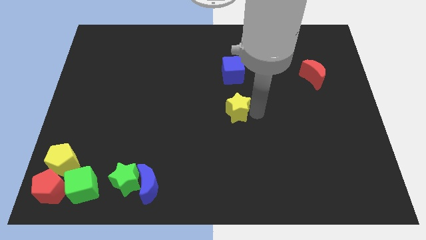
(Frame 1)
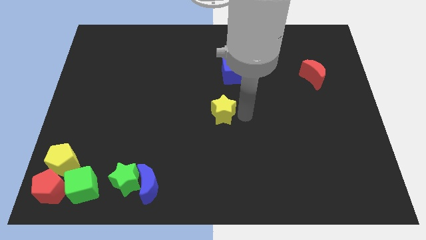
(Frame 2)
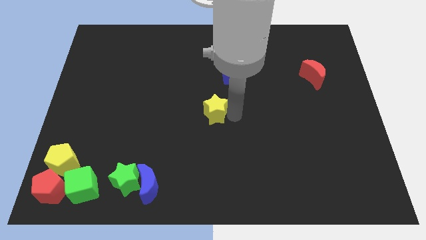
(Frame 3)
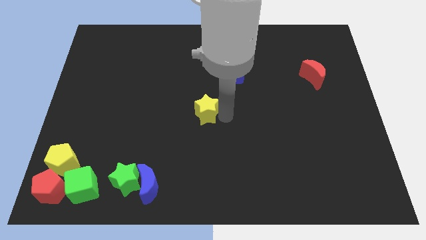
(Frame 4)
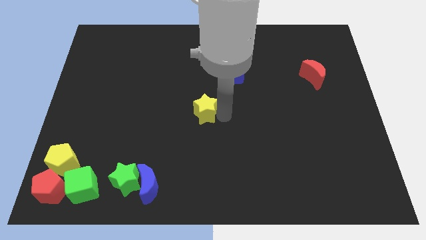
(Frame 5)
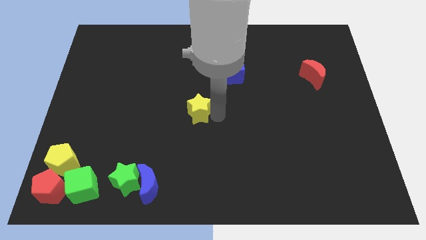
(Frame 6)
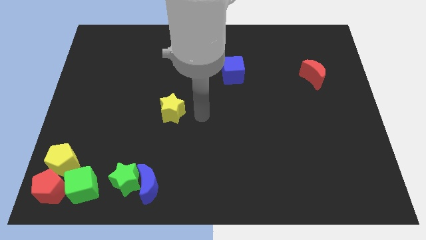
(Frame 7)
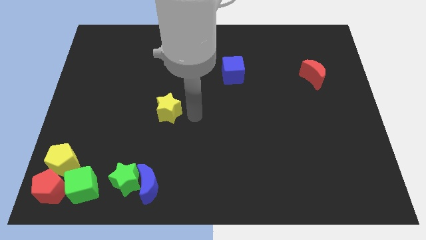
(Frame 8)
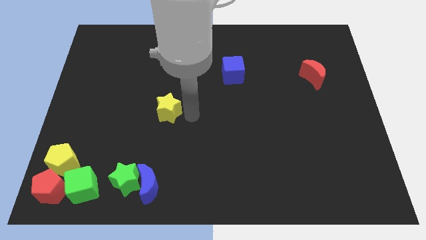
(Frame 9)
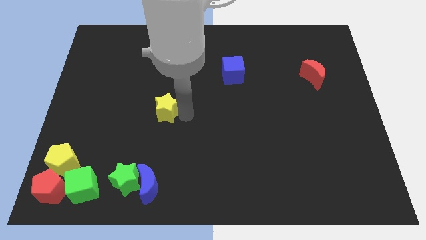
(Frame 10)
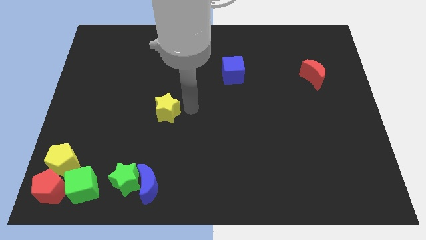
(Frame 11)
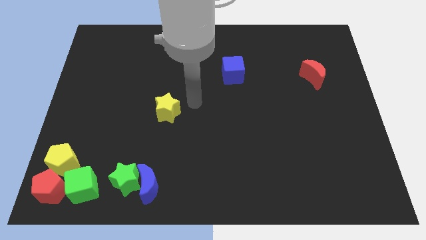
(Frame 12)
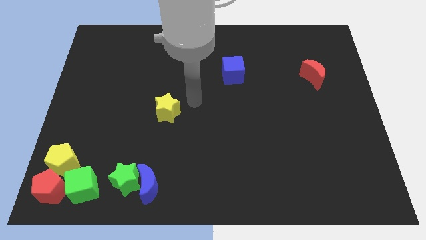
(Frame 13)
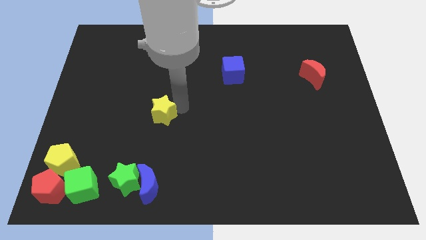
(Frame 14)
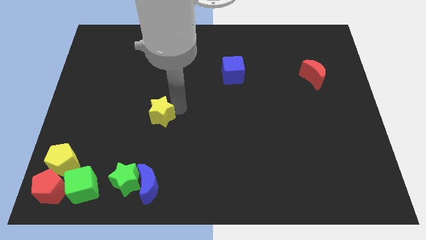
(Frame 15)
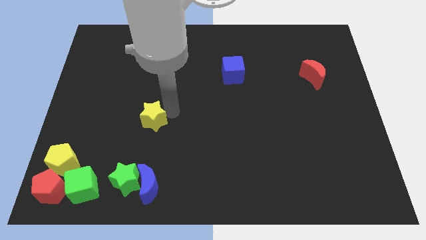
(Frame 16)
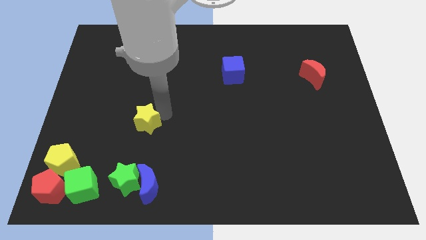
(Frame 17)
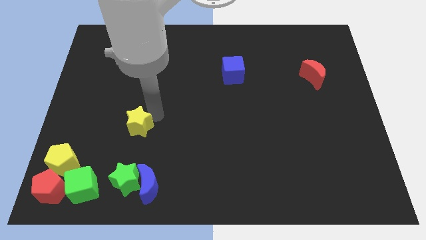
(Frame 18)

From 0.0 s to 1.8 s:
push the yellow star towards the group of blocks

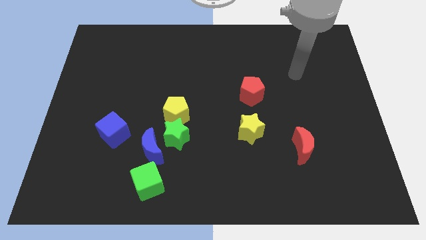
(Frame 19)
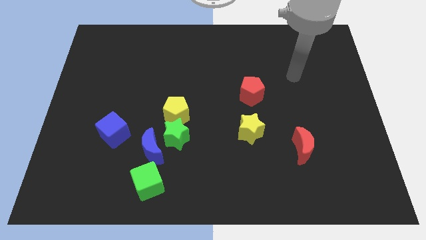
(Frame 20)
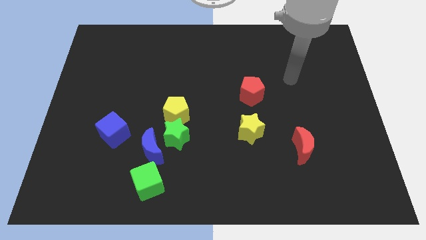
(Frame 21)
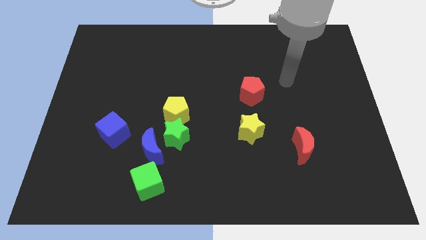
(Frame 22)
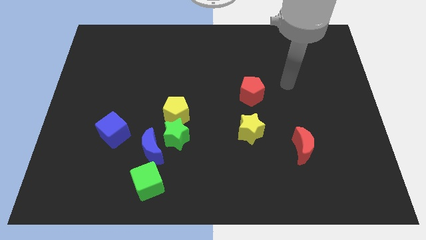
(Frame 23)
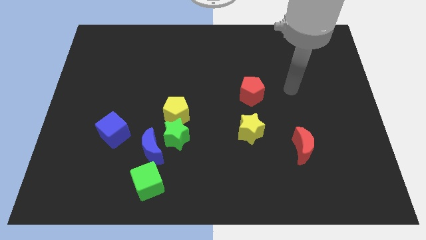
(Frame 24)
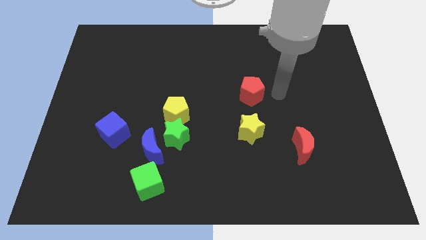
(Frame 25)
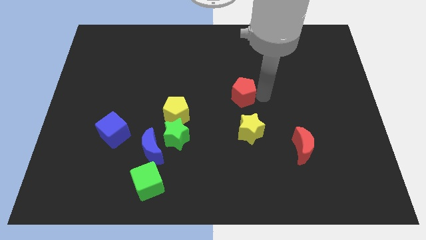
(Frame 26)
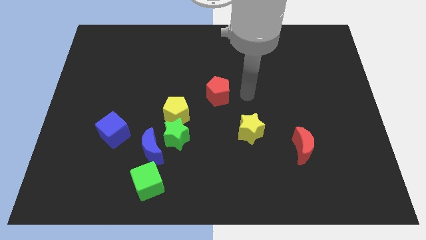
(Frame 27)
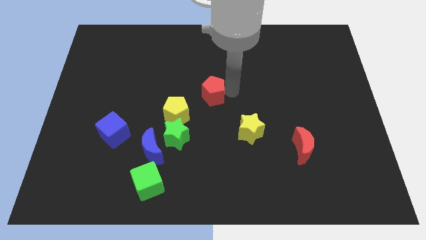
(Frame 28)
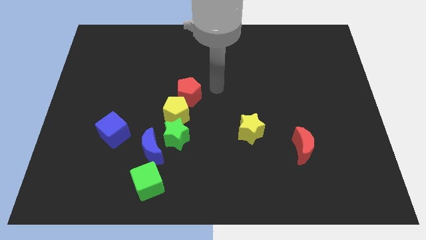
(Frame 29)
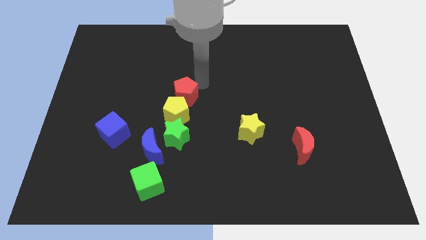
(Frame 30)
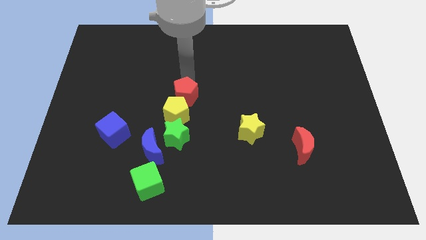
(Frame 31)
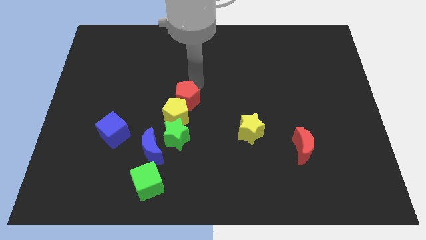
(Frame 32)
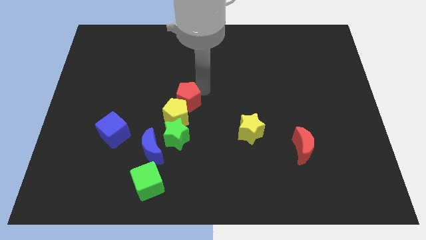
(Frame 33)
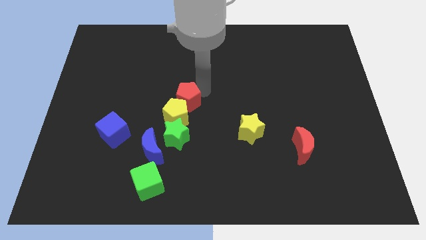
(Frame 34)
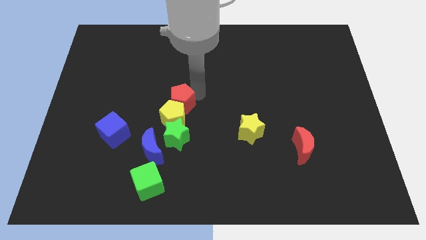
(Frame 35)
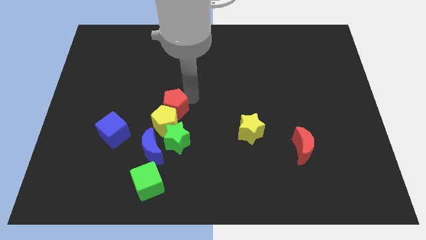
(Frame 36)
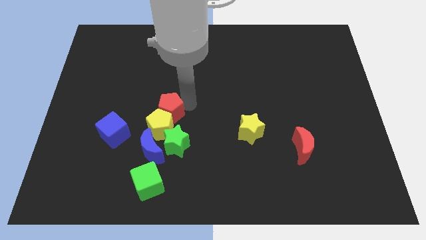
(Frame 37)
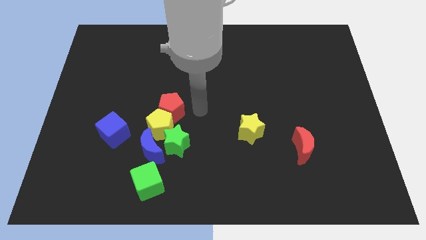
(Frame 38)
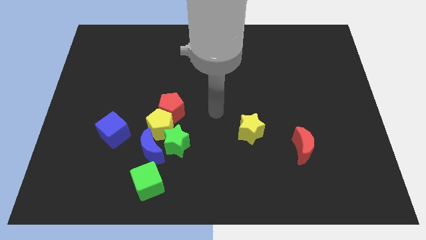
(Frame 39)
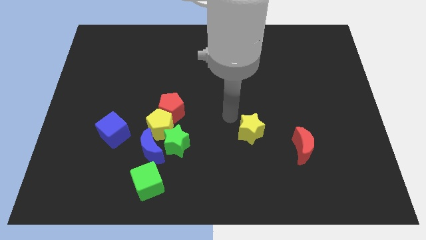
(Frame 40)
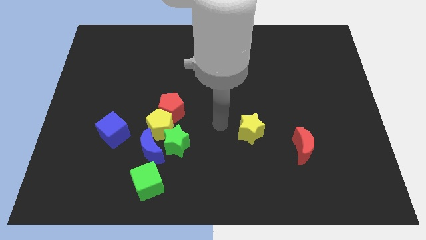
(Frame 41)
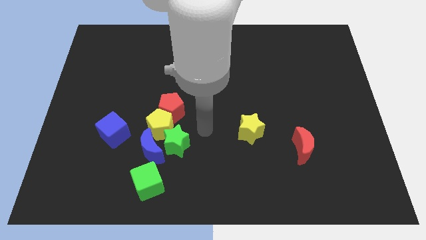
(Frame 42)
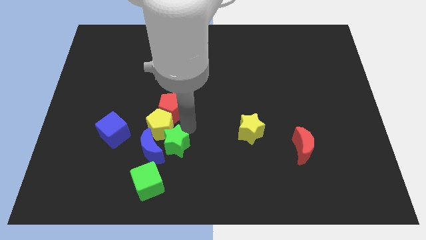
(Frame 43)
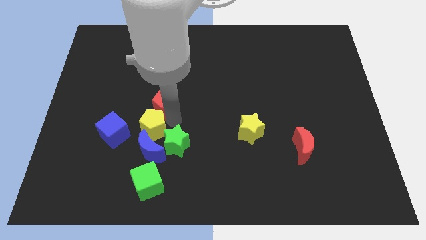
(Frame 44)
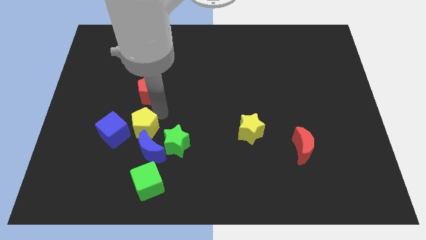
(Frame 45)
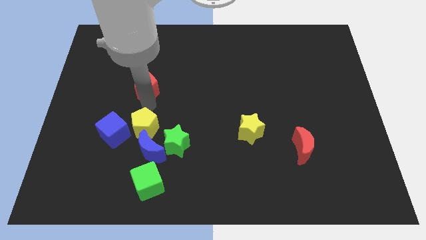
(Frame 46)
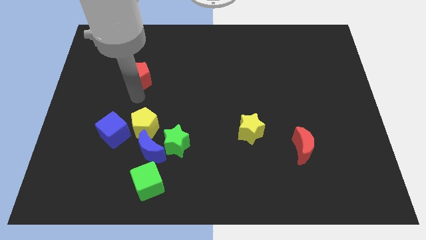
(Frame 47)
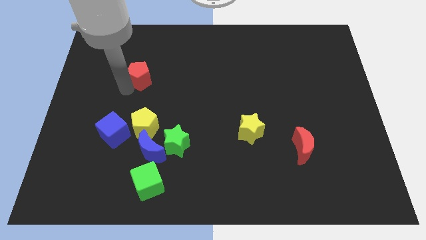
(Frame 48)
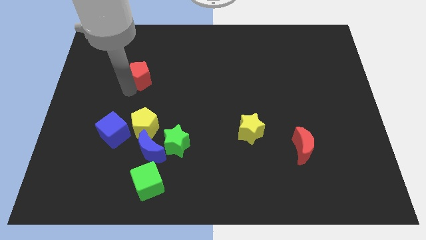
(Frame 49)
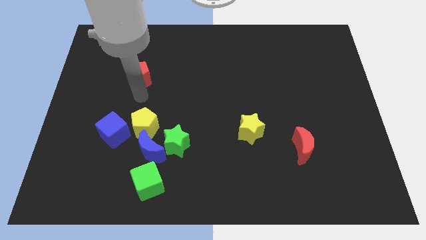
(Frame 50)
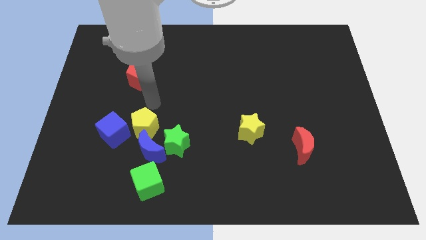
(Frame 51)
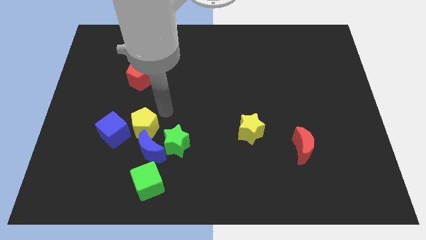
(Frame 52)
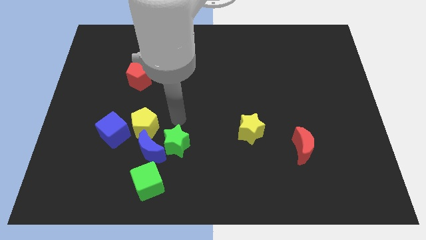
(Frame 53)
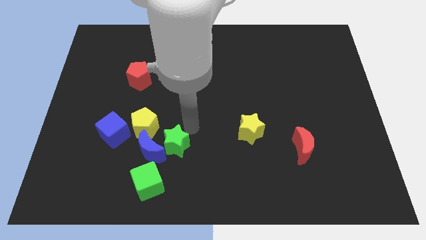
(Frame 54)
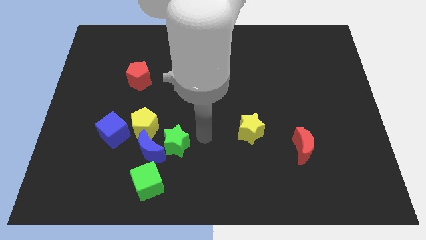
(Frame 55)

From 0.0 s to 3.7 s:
place the red pentagon diagonal above the yellow pentagon

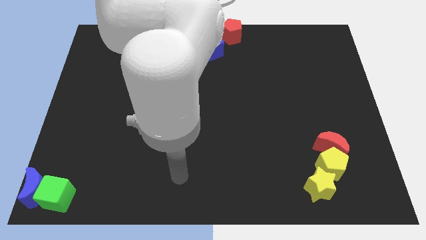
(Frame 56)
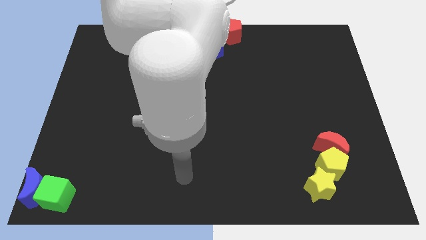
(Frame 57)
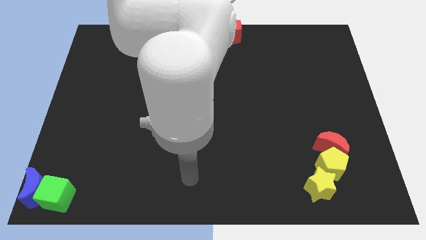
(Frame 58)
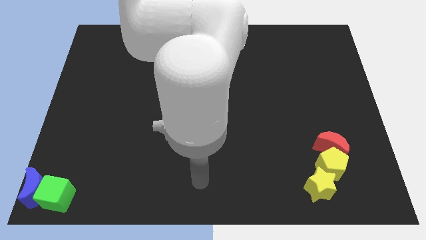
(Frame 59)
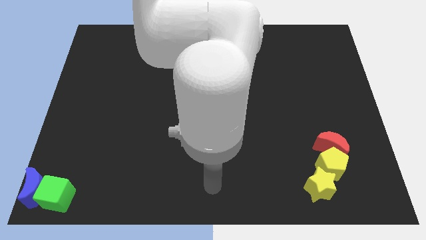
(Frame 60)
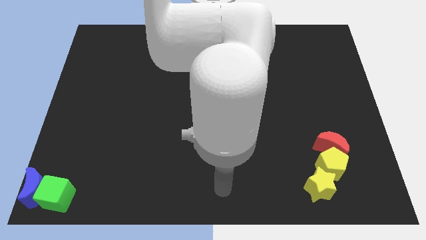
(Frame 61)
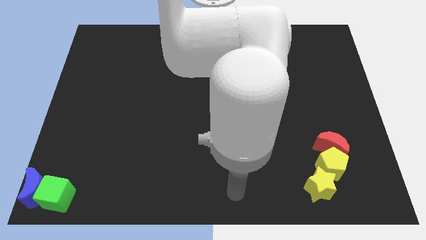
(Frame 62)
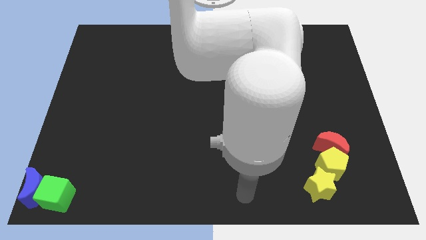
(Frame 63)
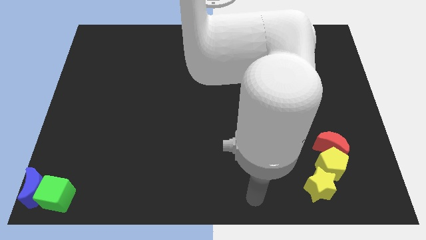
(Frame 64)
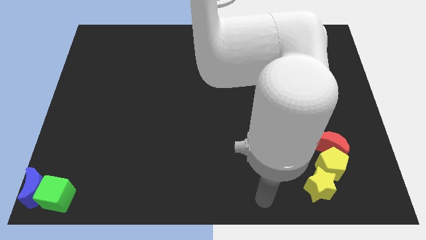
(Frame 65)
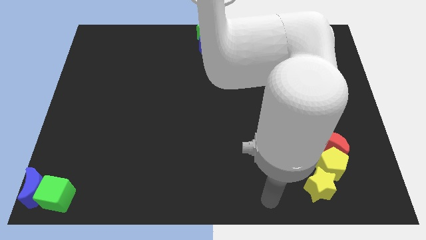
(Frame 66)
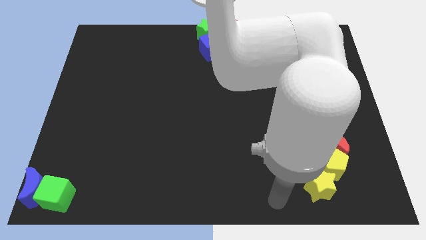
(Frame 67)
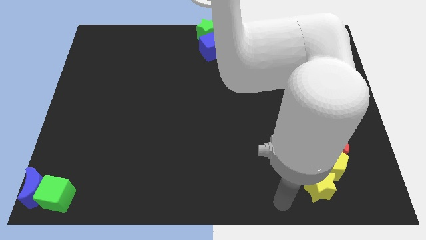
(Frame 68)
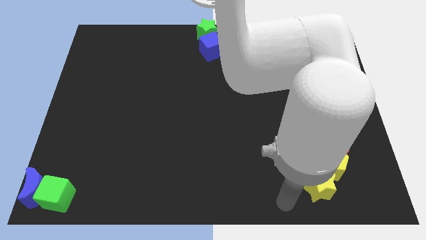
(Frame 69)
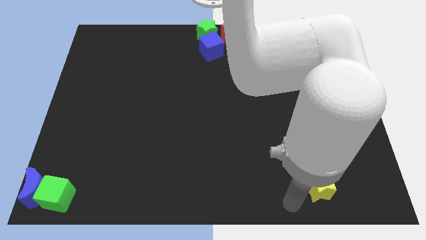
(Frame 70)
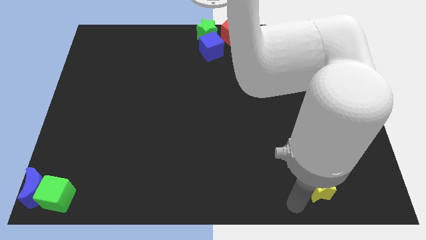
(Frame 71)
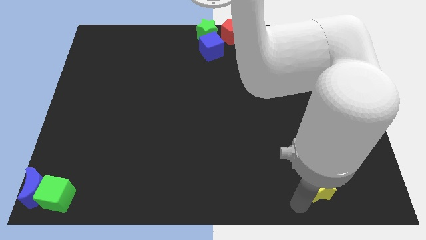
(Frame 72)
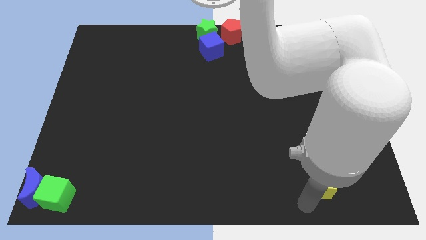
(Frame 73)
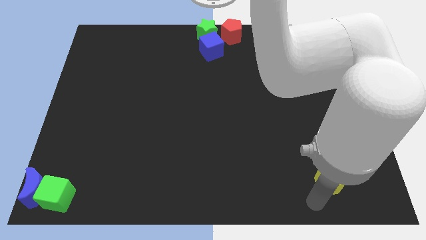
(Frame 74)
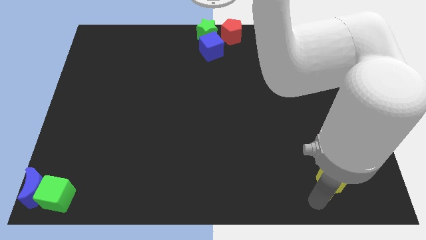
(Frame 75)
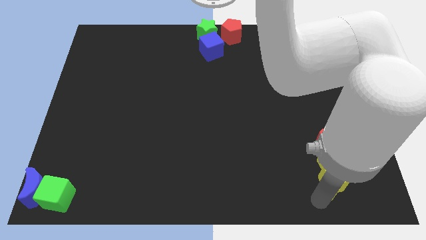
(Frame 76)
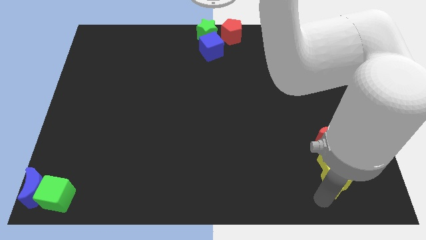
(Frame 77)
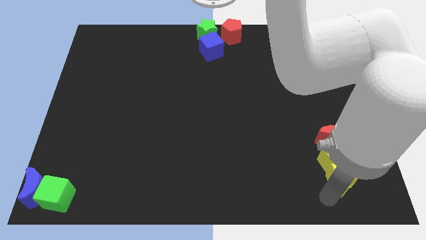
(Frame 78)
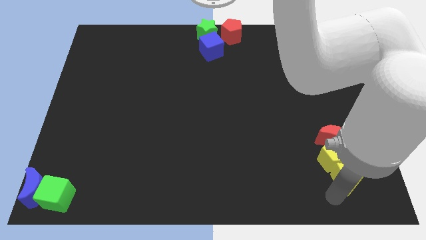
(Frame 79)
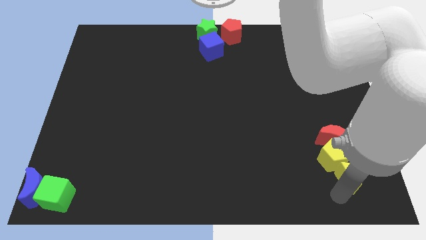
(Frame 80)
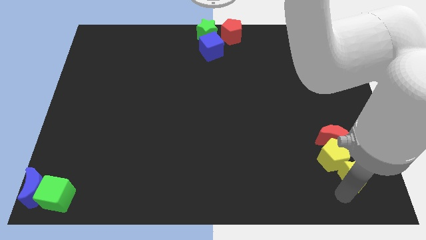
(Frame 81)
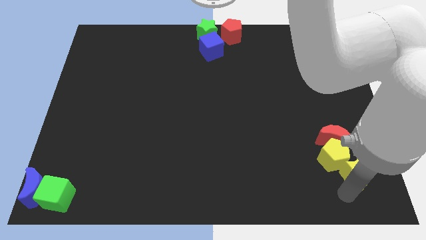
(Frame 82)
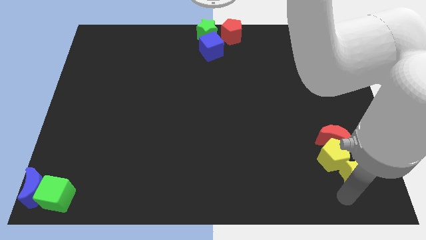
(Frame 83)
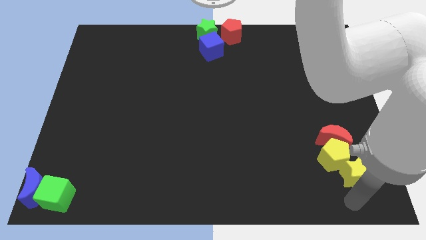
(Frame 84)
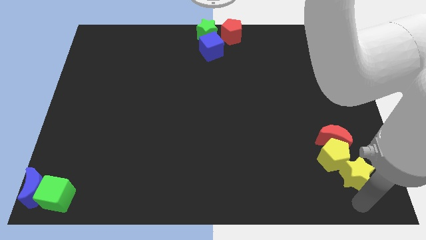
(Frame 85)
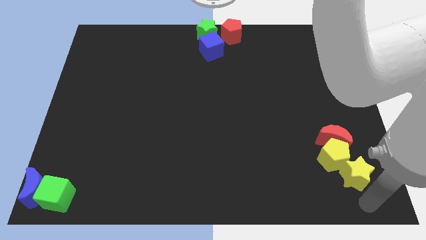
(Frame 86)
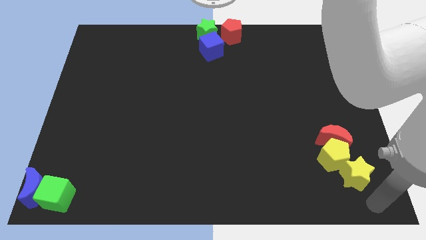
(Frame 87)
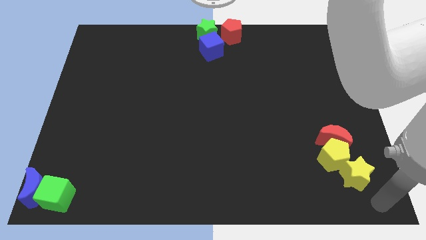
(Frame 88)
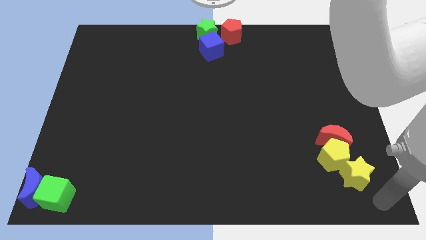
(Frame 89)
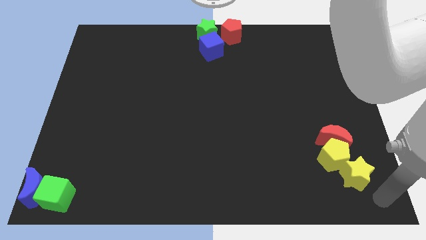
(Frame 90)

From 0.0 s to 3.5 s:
move the yellow star to the bottom right side of the yellow pentagon
